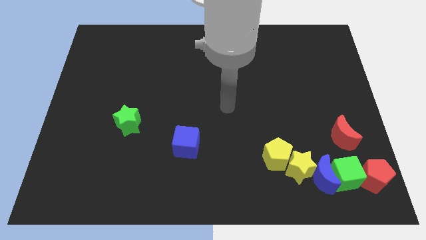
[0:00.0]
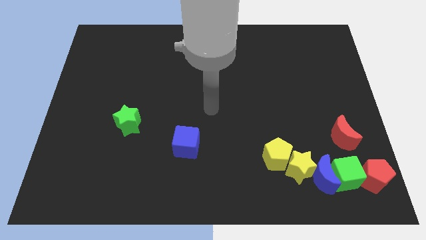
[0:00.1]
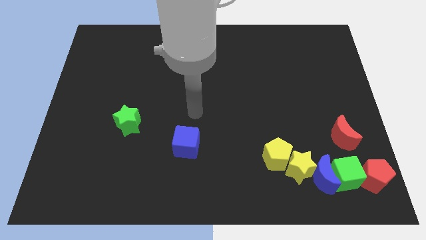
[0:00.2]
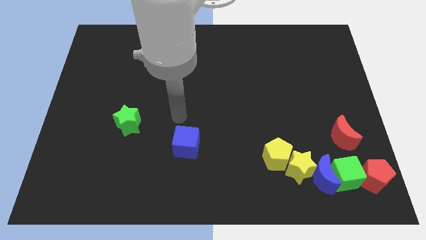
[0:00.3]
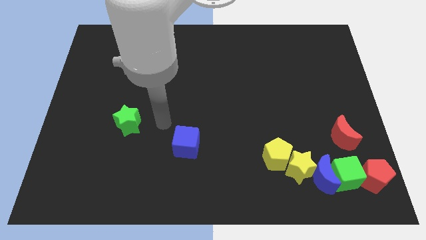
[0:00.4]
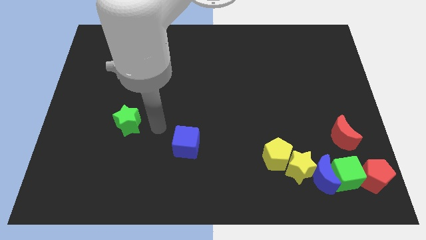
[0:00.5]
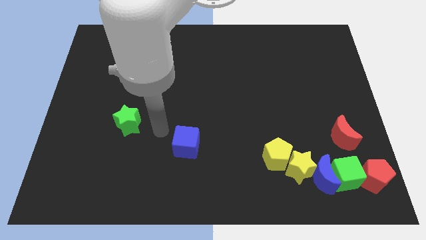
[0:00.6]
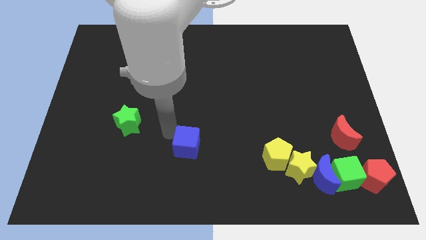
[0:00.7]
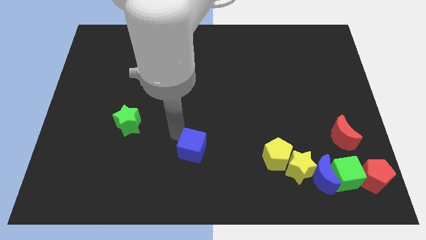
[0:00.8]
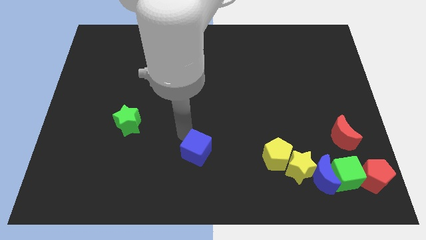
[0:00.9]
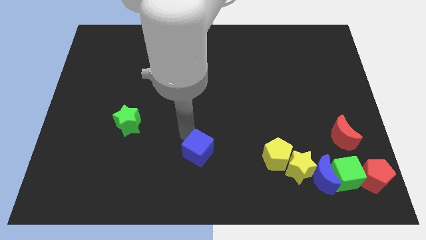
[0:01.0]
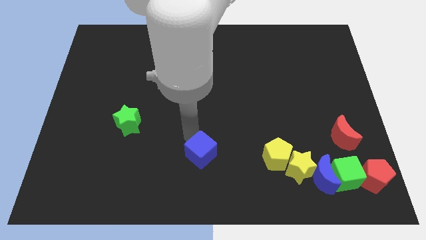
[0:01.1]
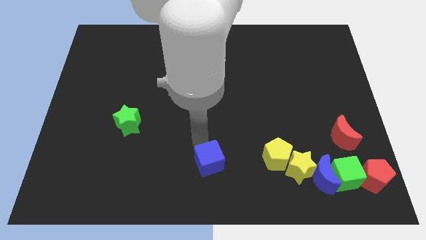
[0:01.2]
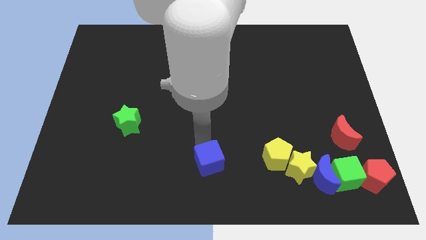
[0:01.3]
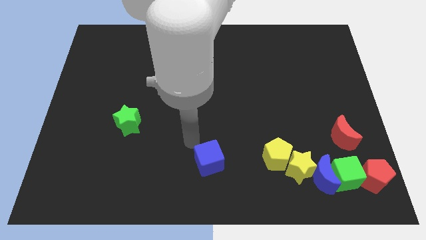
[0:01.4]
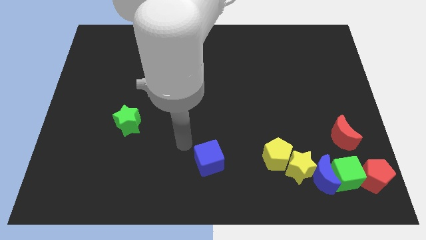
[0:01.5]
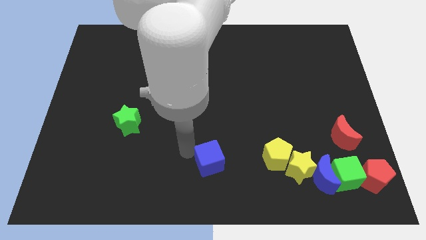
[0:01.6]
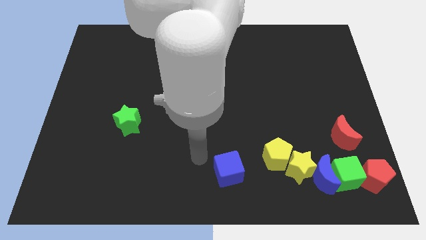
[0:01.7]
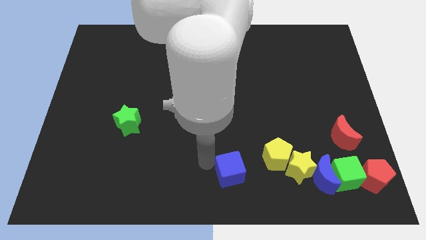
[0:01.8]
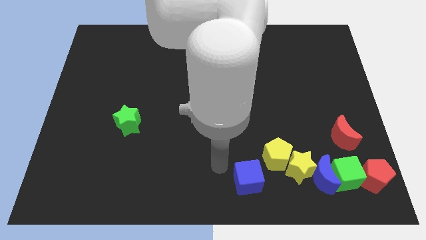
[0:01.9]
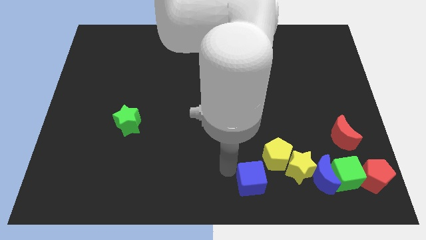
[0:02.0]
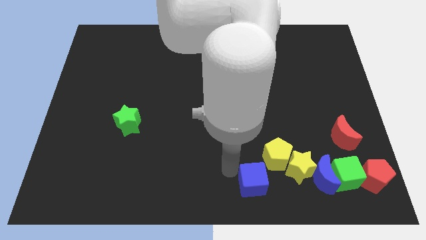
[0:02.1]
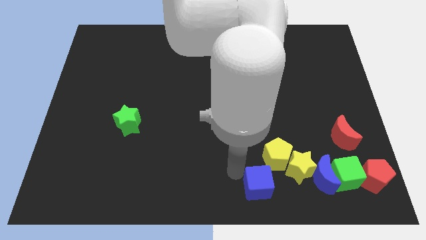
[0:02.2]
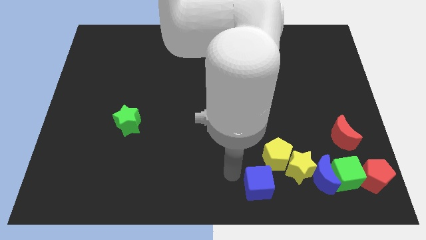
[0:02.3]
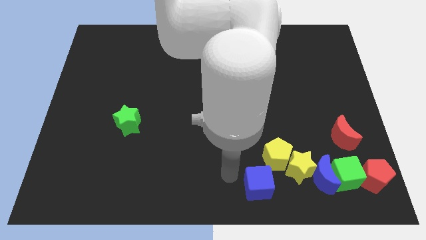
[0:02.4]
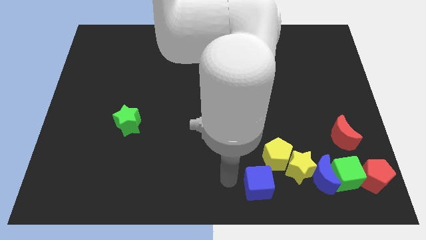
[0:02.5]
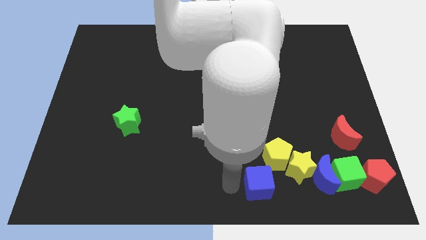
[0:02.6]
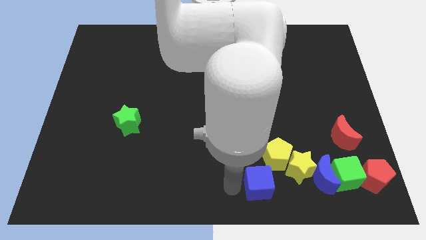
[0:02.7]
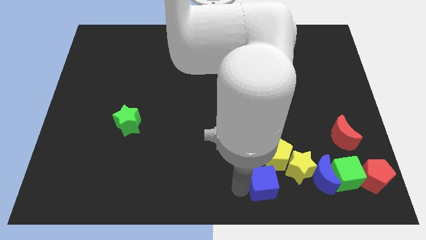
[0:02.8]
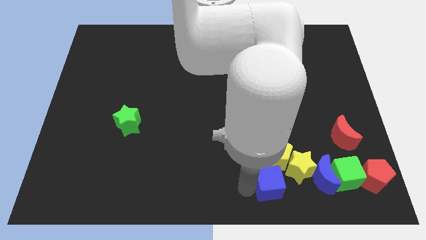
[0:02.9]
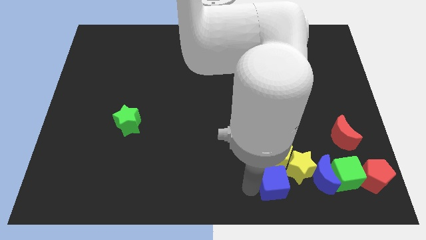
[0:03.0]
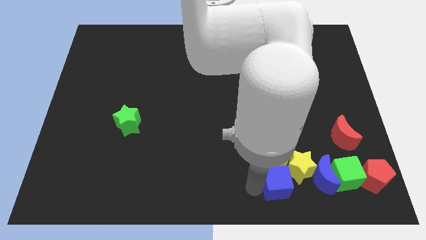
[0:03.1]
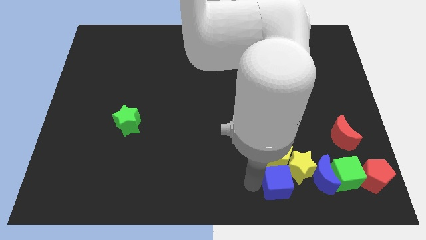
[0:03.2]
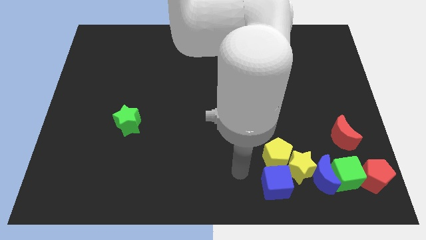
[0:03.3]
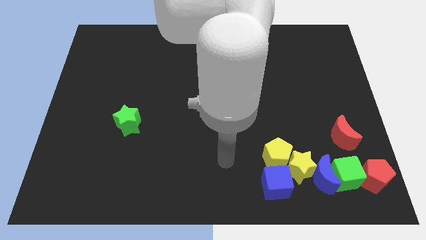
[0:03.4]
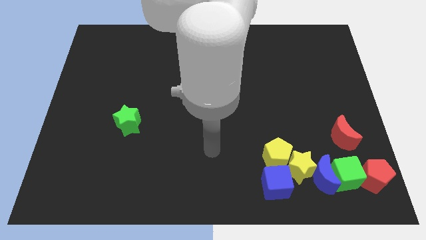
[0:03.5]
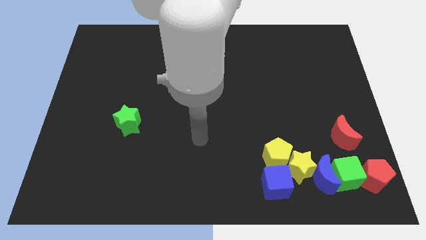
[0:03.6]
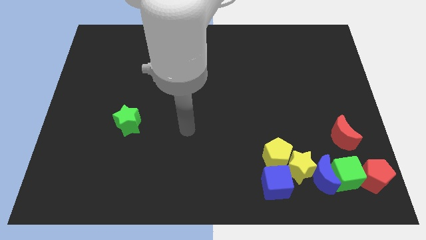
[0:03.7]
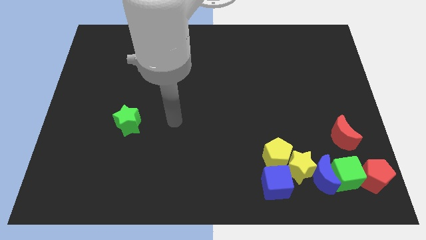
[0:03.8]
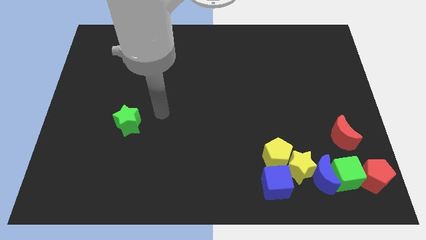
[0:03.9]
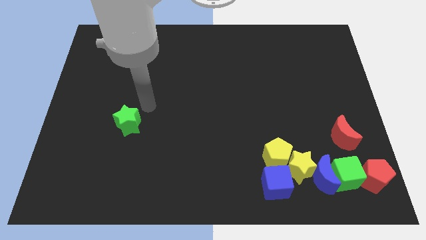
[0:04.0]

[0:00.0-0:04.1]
place blue cube below yellow pentagon

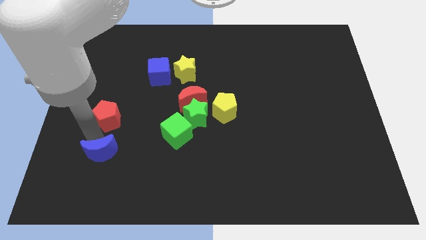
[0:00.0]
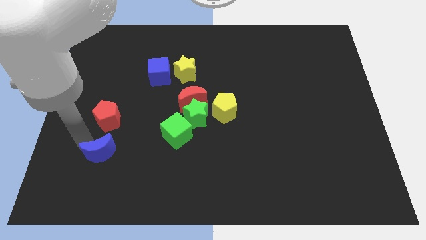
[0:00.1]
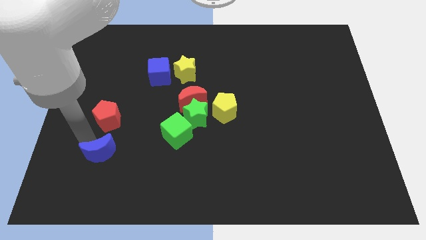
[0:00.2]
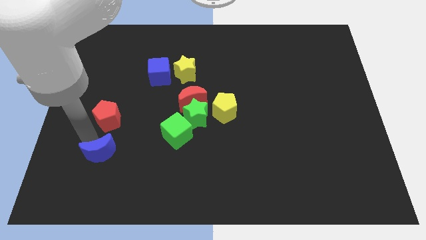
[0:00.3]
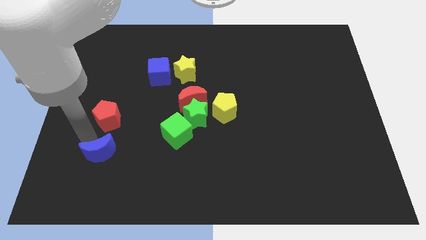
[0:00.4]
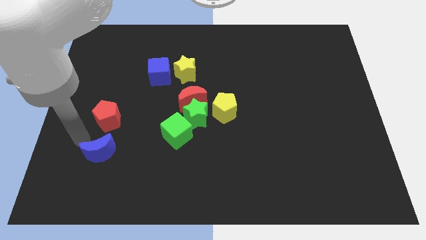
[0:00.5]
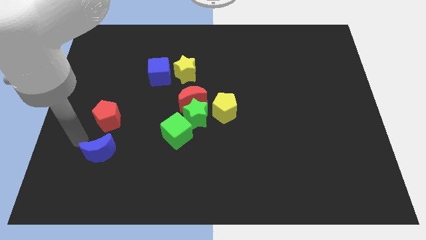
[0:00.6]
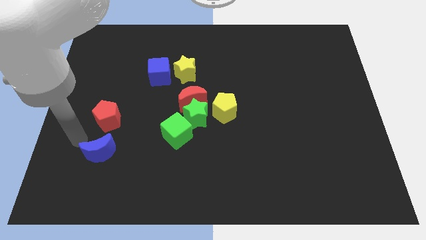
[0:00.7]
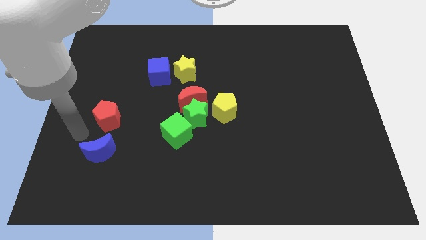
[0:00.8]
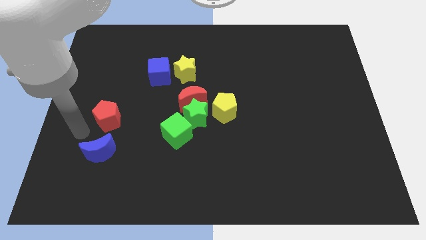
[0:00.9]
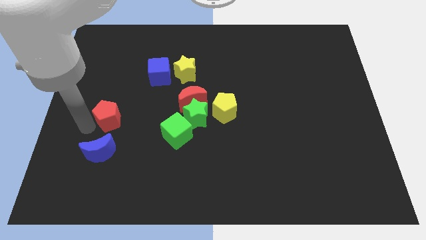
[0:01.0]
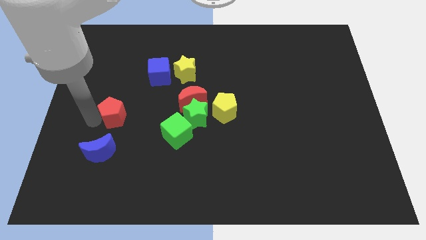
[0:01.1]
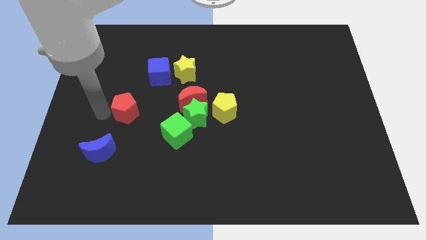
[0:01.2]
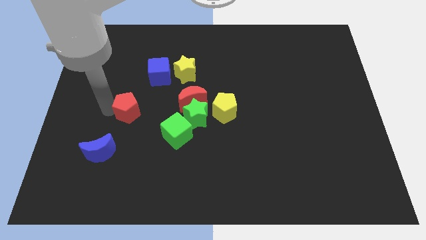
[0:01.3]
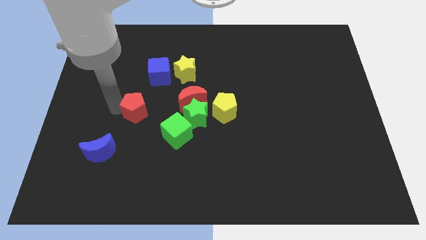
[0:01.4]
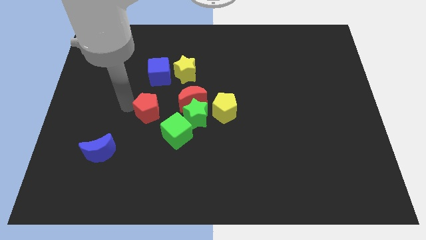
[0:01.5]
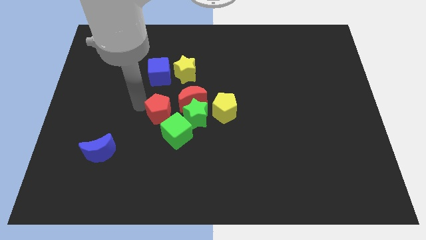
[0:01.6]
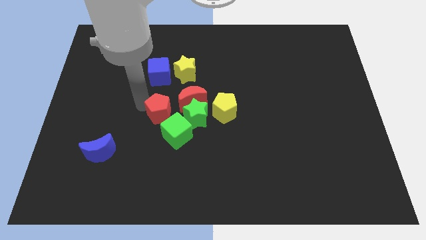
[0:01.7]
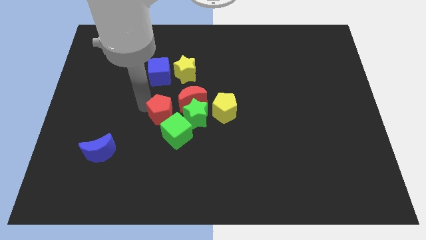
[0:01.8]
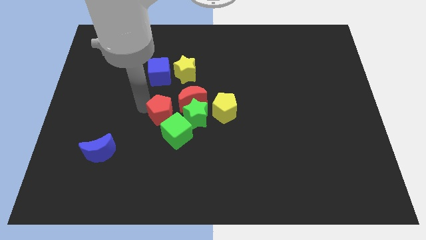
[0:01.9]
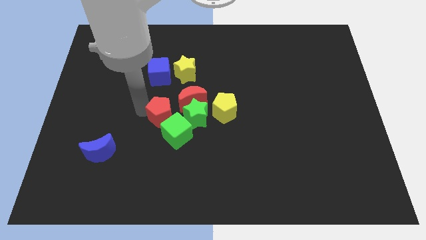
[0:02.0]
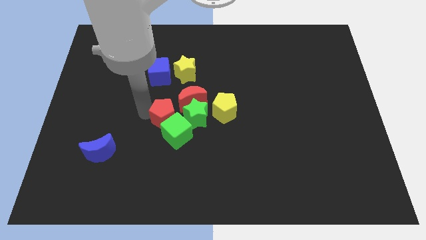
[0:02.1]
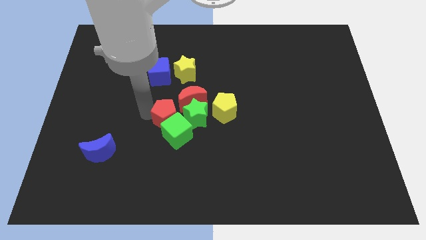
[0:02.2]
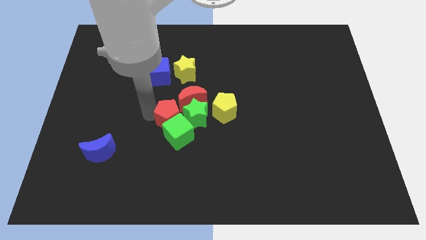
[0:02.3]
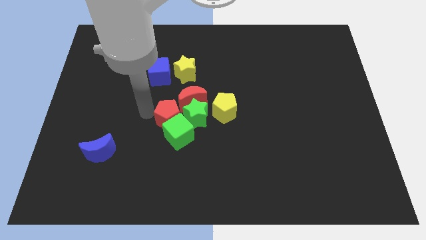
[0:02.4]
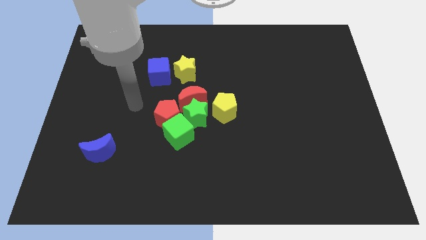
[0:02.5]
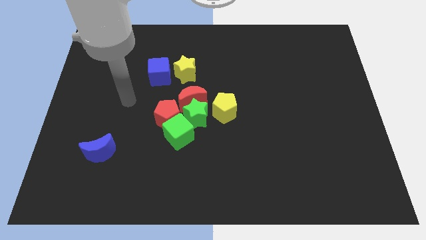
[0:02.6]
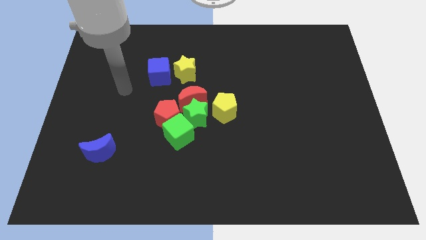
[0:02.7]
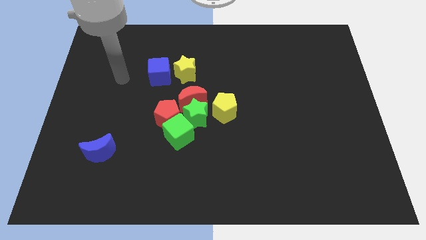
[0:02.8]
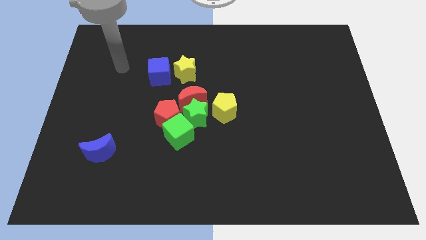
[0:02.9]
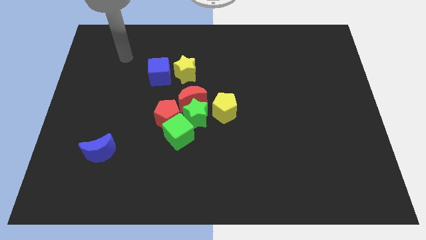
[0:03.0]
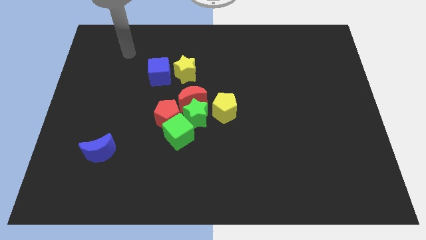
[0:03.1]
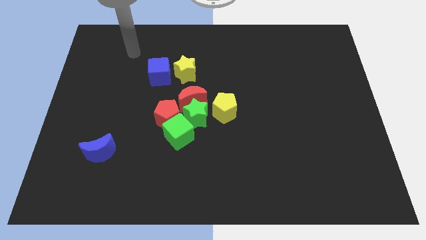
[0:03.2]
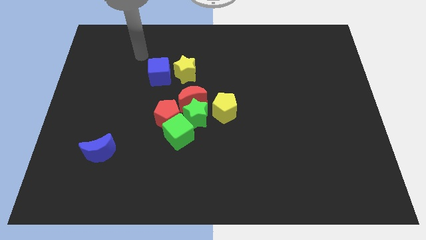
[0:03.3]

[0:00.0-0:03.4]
place the red pentagon to the left side of red moon

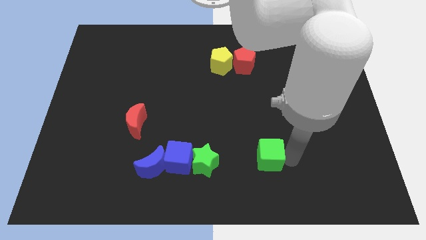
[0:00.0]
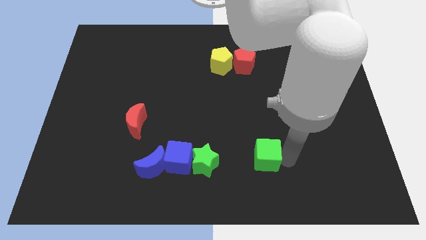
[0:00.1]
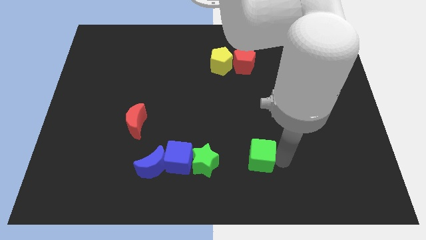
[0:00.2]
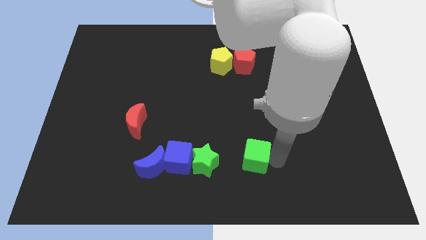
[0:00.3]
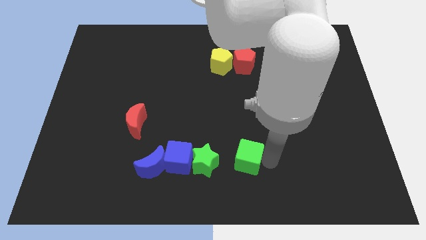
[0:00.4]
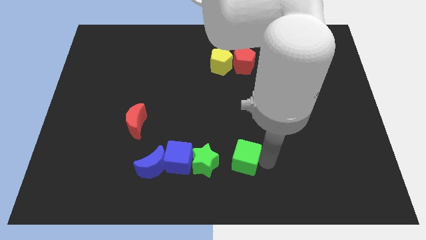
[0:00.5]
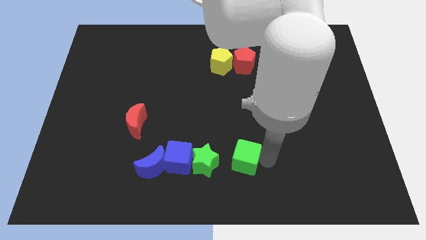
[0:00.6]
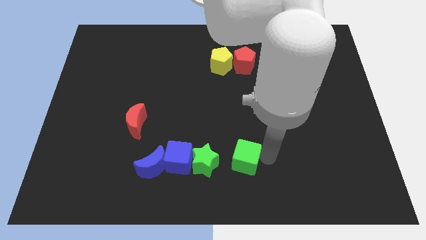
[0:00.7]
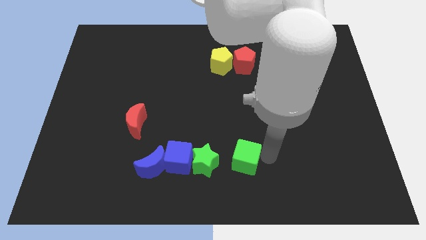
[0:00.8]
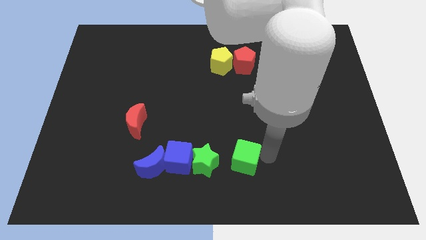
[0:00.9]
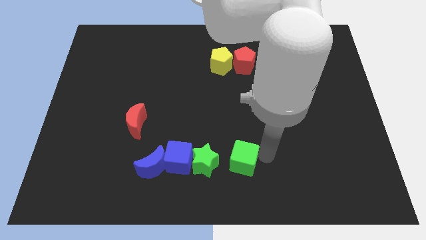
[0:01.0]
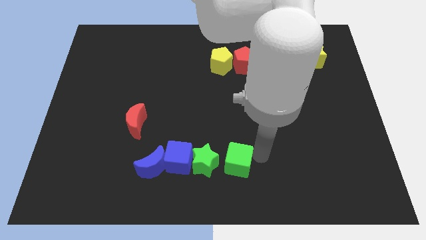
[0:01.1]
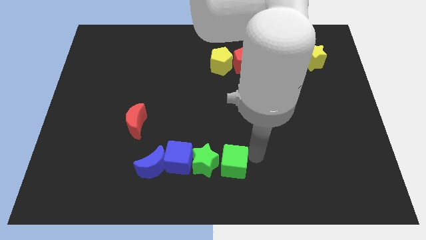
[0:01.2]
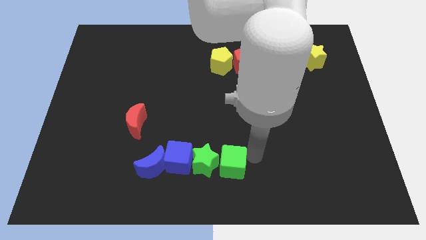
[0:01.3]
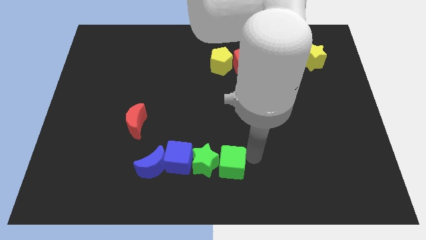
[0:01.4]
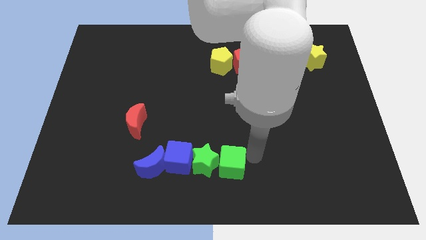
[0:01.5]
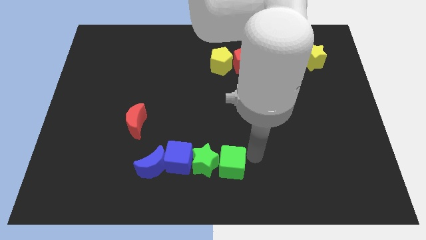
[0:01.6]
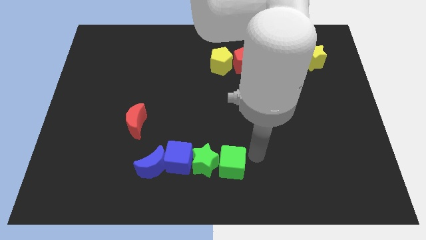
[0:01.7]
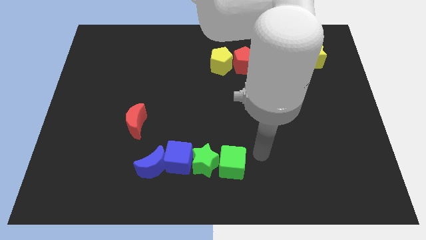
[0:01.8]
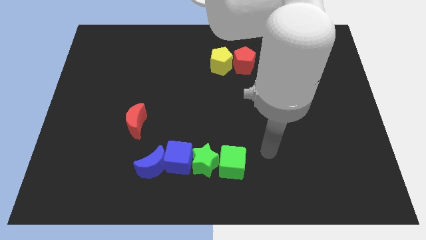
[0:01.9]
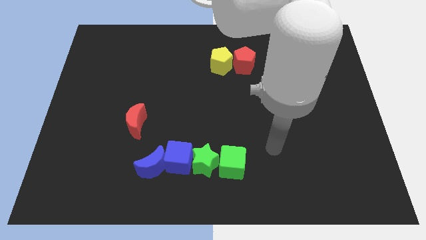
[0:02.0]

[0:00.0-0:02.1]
move the green cube right to the green star
